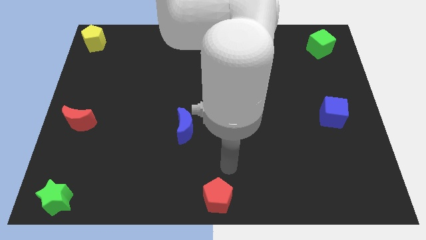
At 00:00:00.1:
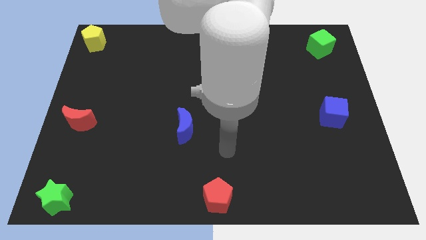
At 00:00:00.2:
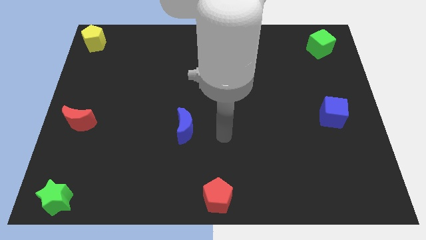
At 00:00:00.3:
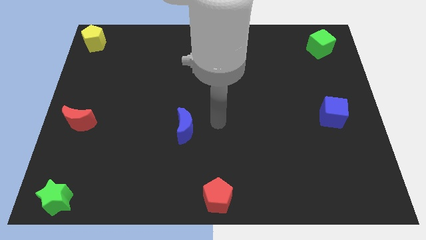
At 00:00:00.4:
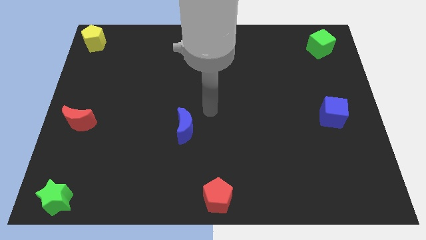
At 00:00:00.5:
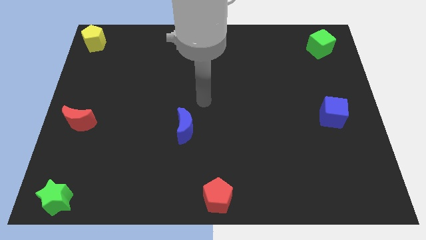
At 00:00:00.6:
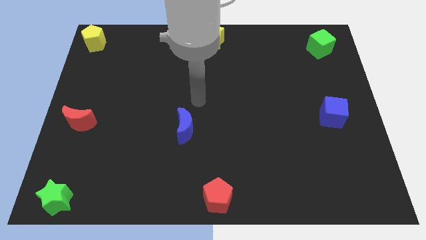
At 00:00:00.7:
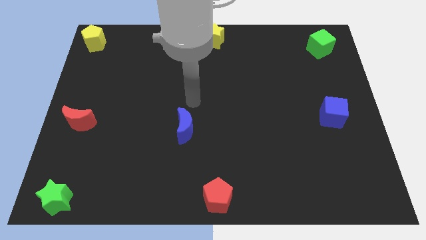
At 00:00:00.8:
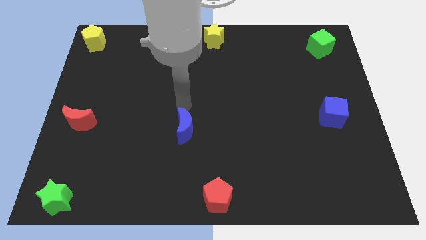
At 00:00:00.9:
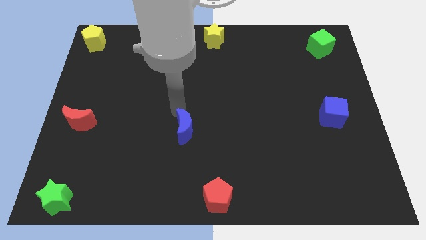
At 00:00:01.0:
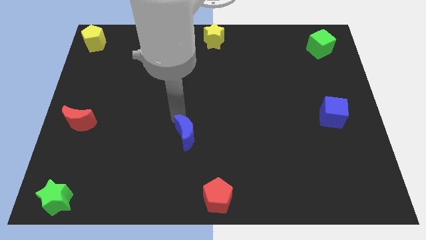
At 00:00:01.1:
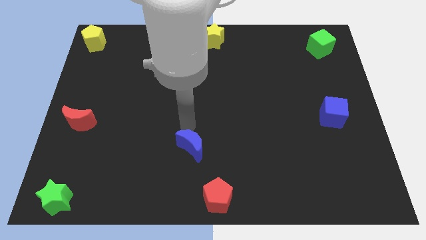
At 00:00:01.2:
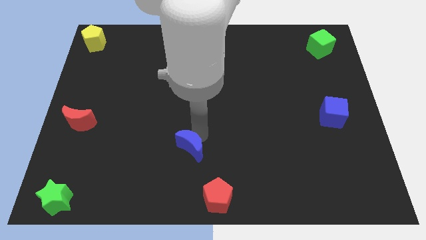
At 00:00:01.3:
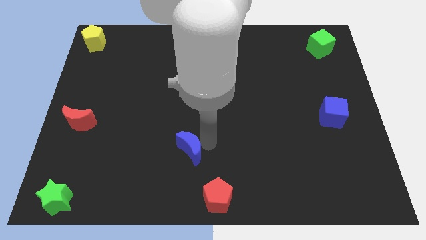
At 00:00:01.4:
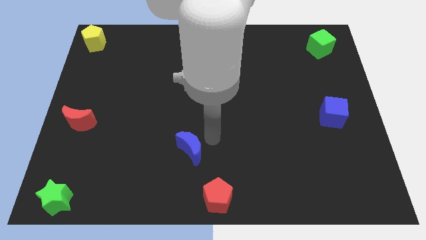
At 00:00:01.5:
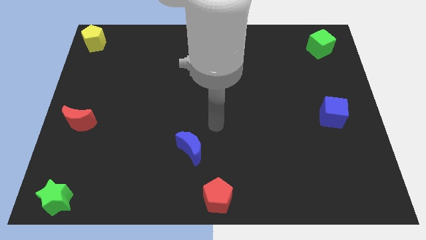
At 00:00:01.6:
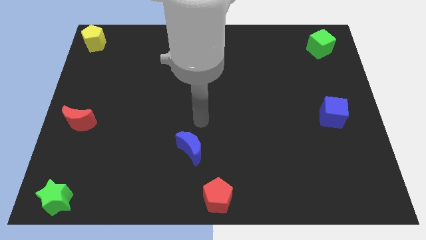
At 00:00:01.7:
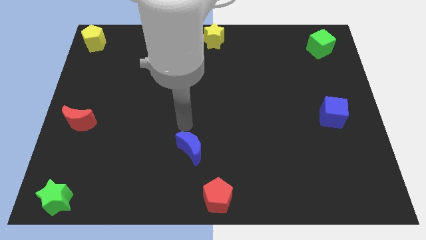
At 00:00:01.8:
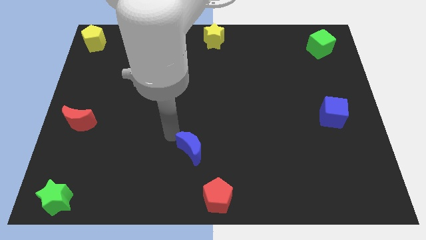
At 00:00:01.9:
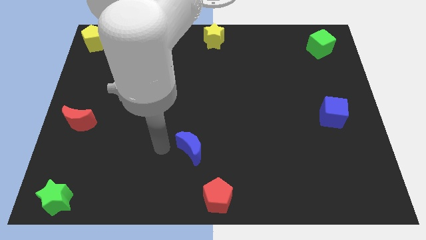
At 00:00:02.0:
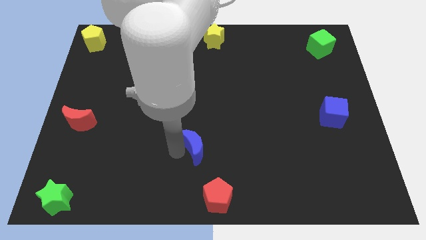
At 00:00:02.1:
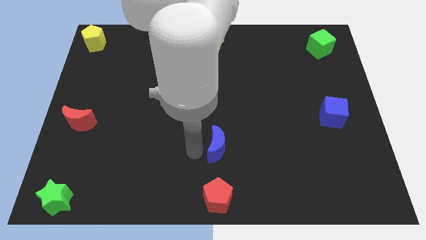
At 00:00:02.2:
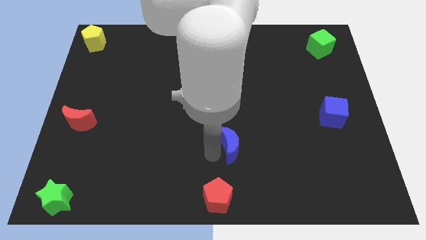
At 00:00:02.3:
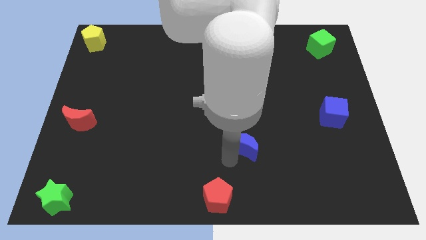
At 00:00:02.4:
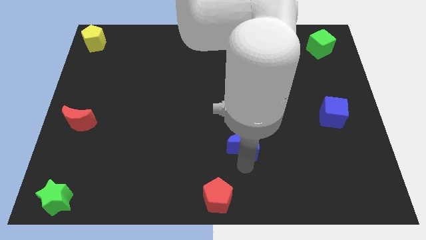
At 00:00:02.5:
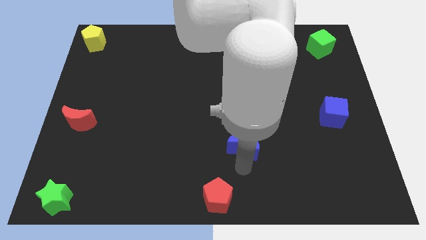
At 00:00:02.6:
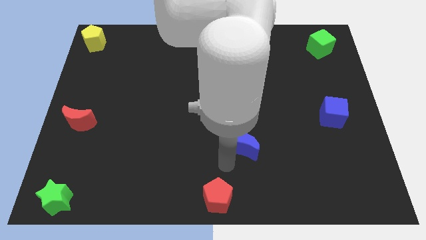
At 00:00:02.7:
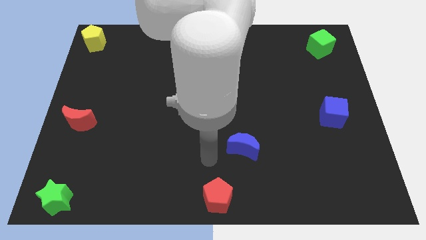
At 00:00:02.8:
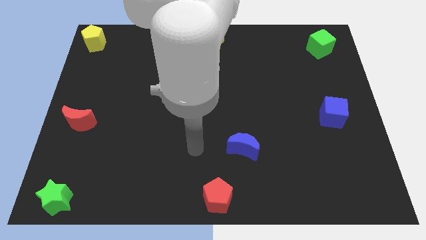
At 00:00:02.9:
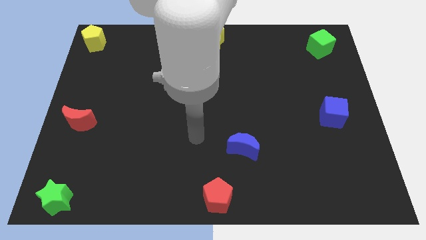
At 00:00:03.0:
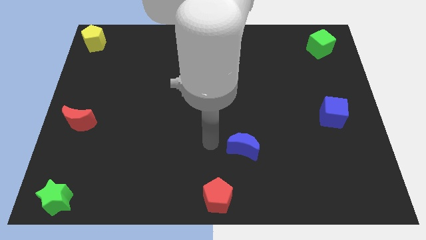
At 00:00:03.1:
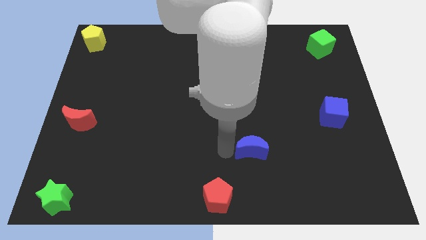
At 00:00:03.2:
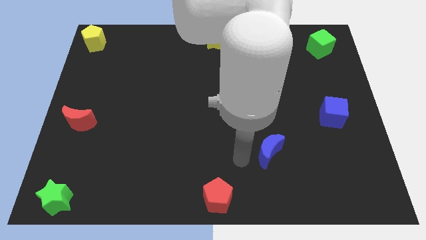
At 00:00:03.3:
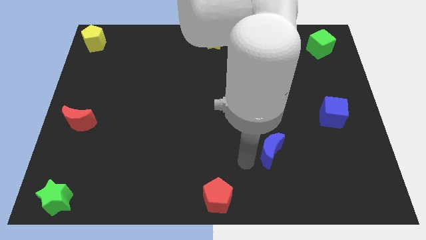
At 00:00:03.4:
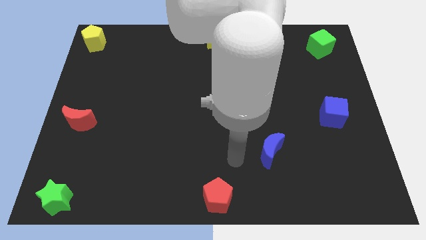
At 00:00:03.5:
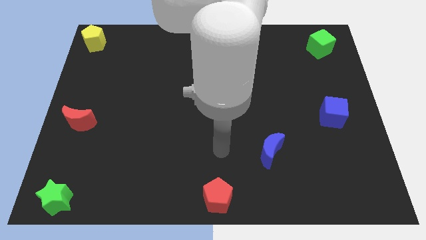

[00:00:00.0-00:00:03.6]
make a diagonal line with the blue blocks and red pentagon

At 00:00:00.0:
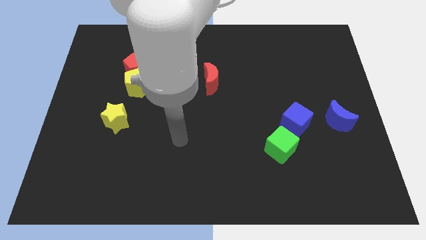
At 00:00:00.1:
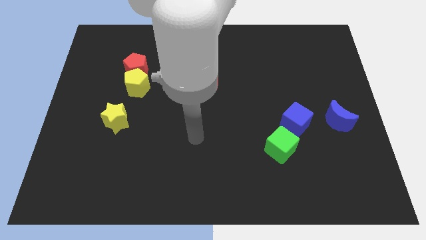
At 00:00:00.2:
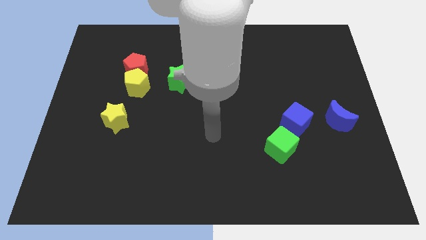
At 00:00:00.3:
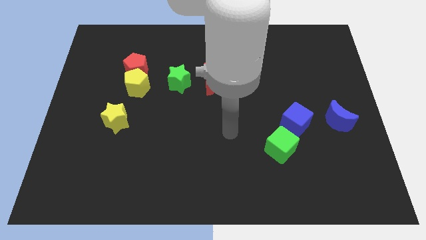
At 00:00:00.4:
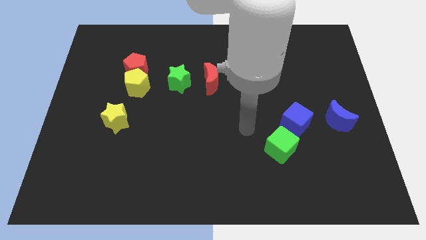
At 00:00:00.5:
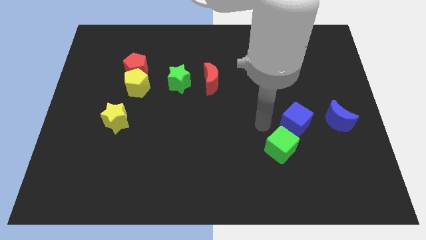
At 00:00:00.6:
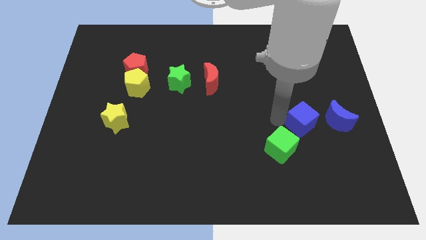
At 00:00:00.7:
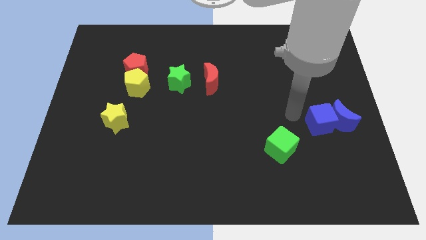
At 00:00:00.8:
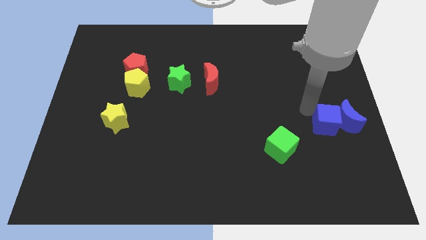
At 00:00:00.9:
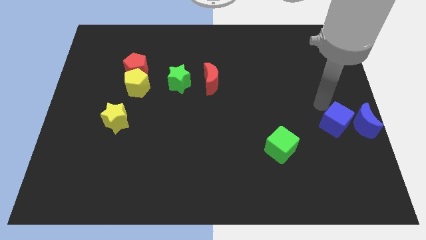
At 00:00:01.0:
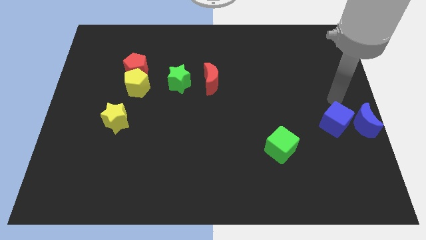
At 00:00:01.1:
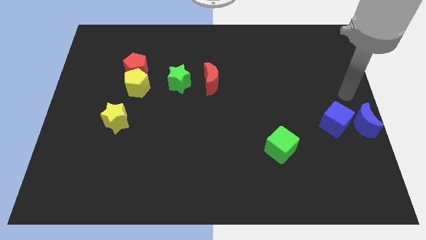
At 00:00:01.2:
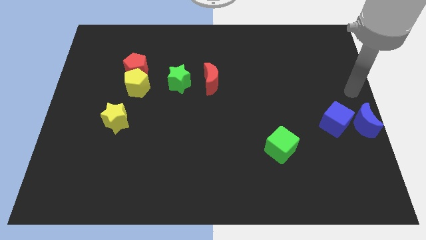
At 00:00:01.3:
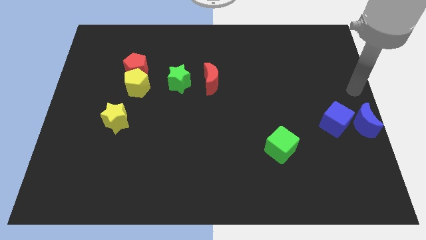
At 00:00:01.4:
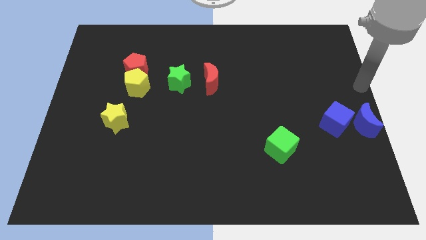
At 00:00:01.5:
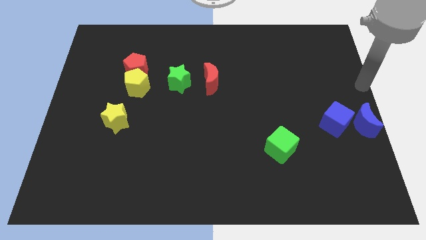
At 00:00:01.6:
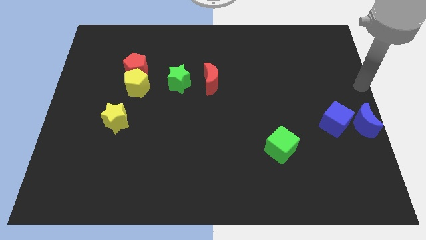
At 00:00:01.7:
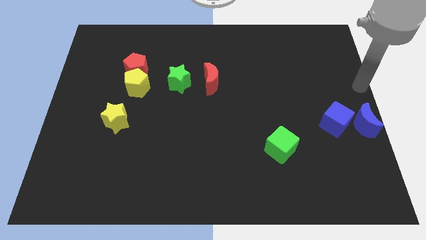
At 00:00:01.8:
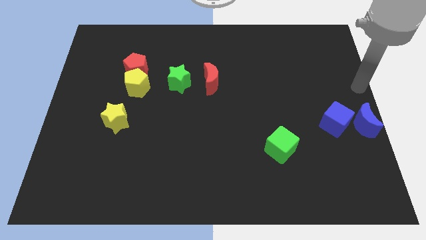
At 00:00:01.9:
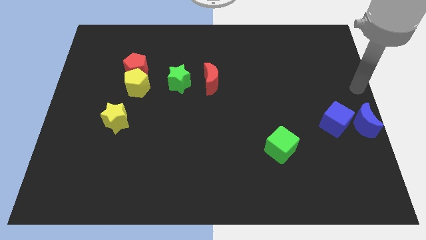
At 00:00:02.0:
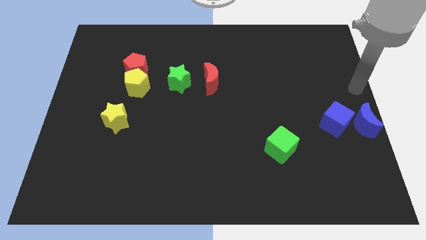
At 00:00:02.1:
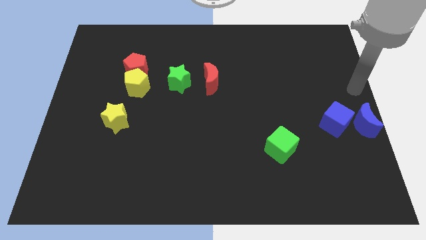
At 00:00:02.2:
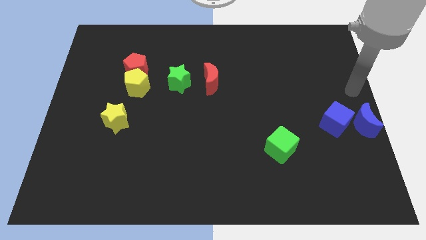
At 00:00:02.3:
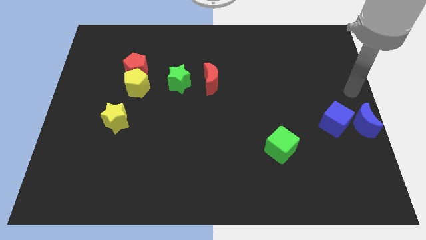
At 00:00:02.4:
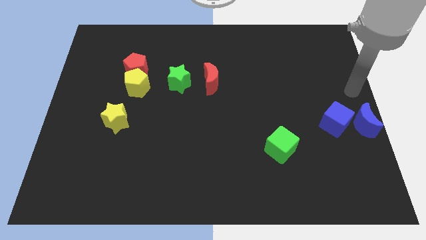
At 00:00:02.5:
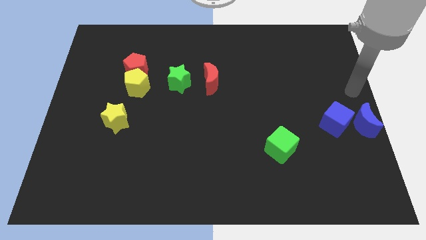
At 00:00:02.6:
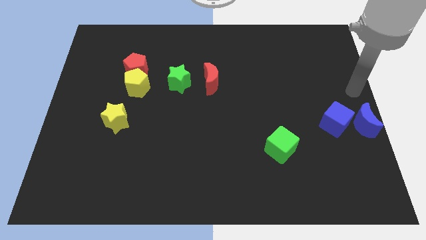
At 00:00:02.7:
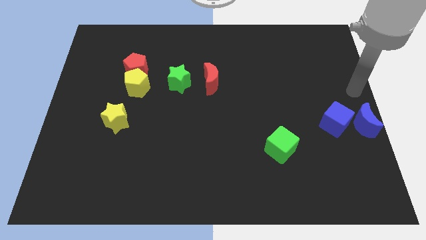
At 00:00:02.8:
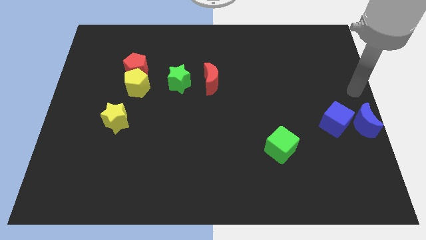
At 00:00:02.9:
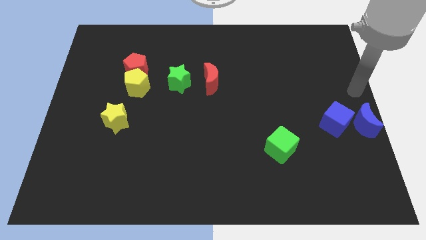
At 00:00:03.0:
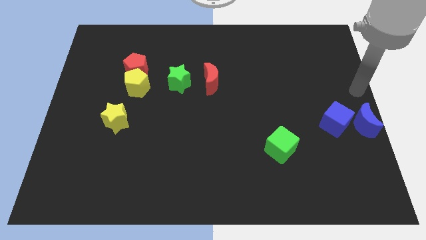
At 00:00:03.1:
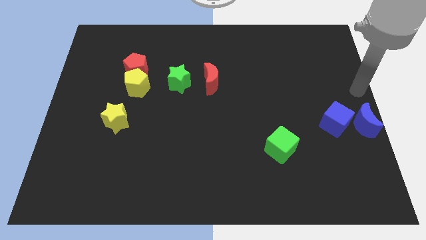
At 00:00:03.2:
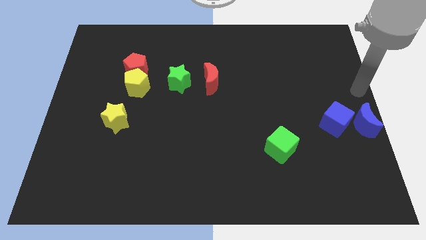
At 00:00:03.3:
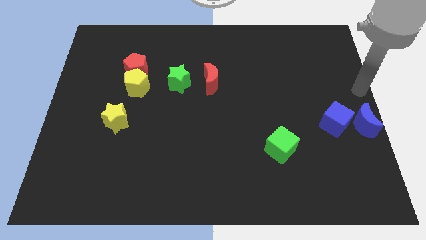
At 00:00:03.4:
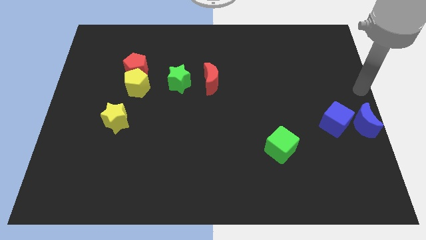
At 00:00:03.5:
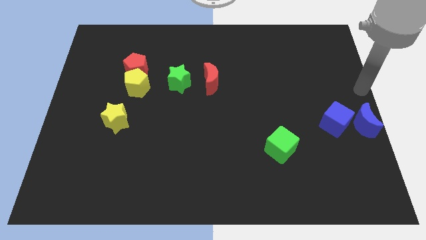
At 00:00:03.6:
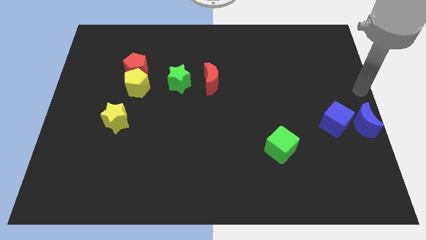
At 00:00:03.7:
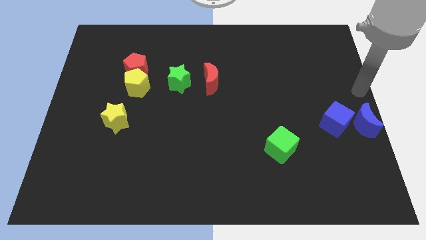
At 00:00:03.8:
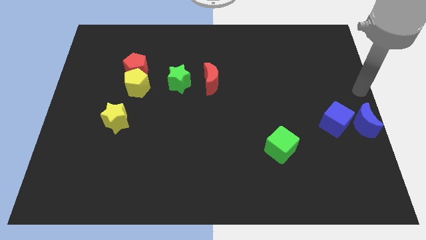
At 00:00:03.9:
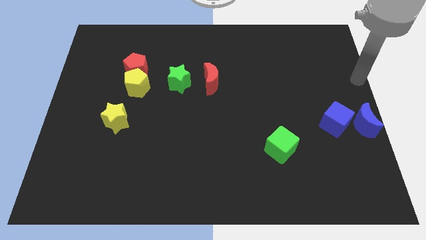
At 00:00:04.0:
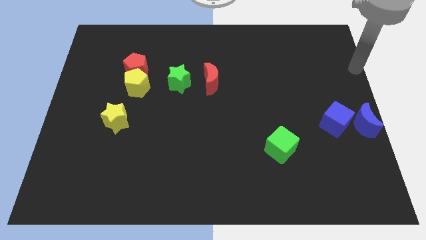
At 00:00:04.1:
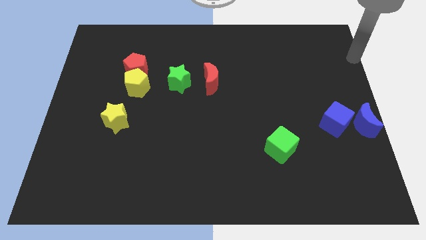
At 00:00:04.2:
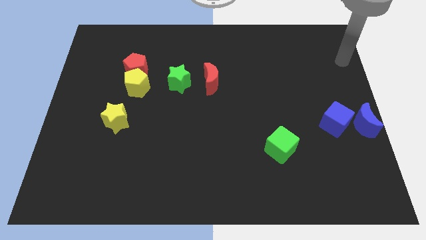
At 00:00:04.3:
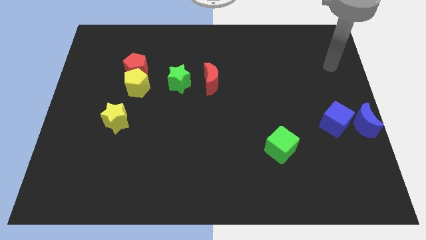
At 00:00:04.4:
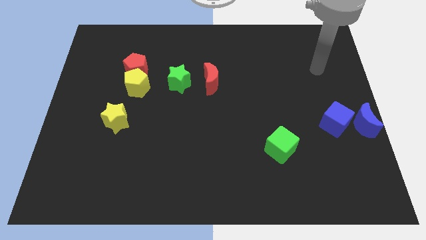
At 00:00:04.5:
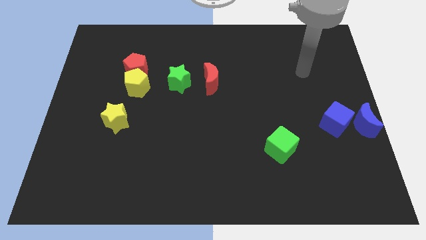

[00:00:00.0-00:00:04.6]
push the blue cube into the blue semicircle

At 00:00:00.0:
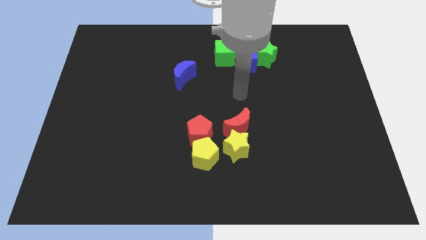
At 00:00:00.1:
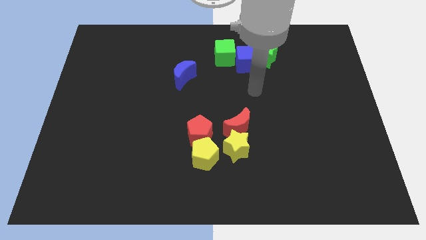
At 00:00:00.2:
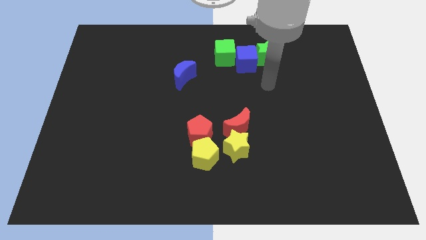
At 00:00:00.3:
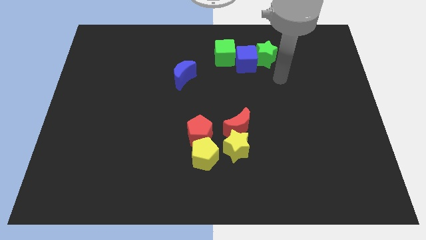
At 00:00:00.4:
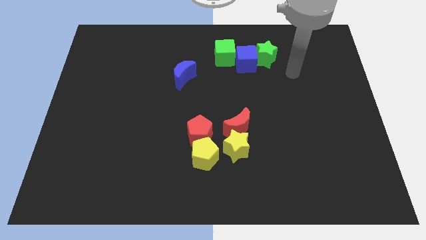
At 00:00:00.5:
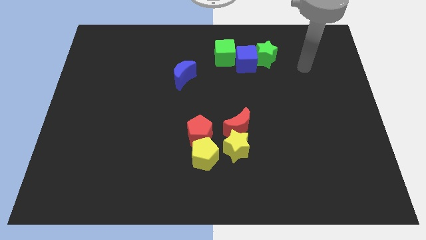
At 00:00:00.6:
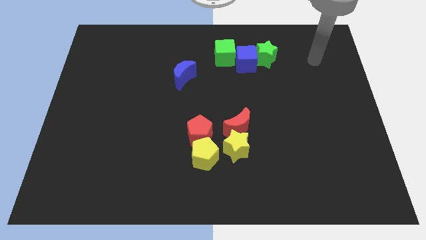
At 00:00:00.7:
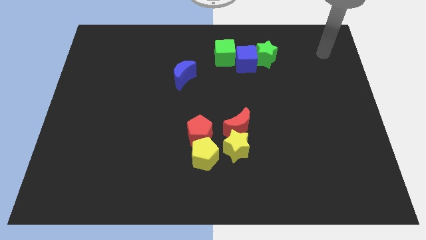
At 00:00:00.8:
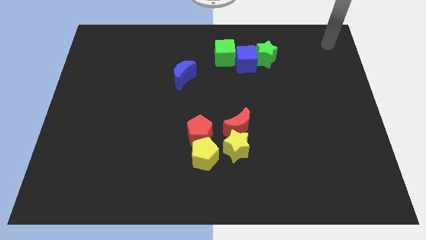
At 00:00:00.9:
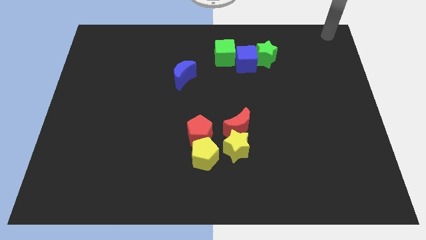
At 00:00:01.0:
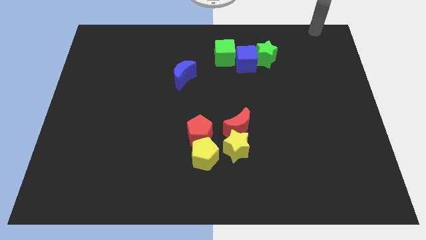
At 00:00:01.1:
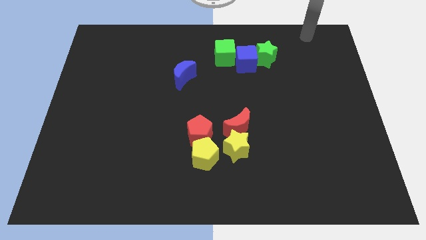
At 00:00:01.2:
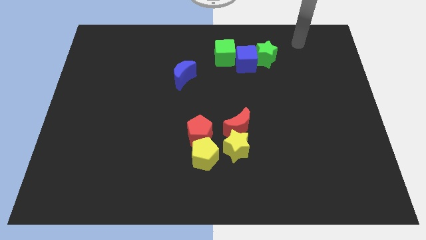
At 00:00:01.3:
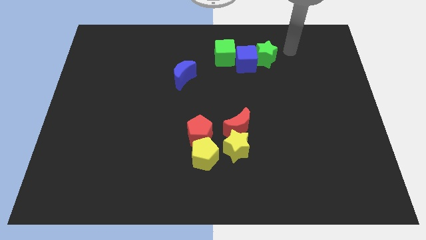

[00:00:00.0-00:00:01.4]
point your hand at the right side of the green star
